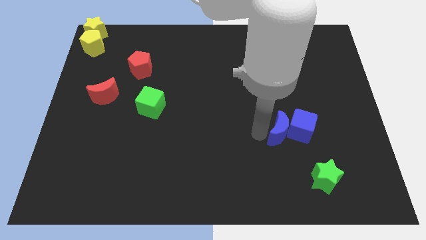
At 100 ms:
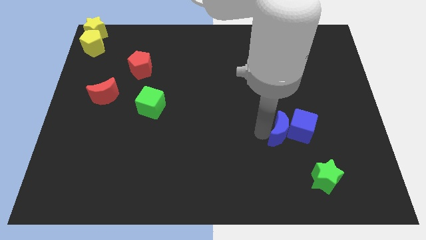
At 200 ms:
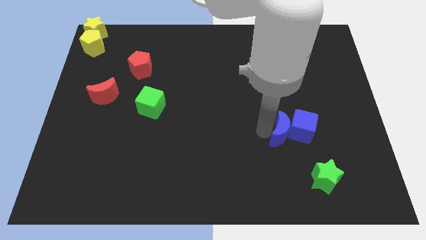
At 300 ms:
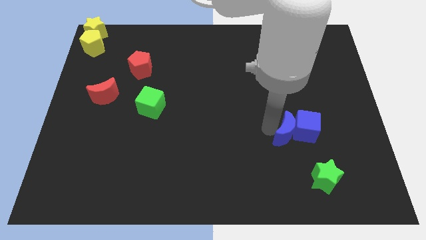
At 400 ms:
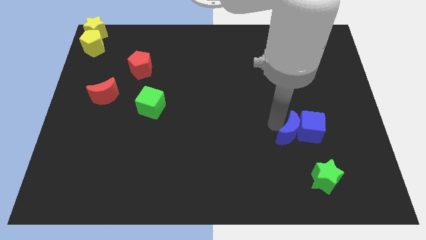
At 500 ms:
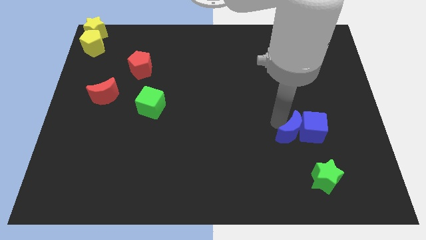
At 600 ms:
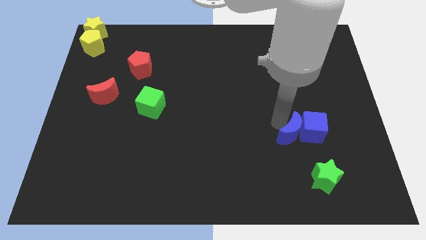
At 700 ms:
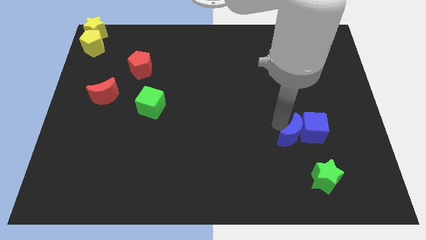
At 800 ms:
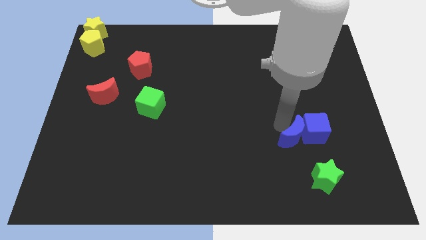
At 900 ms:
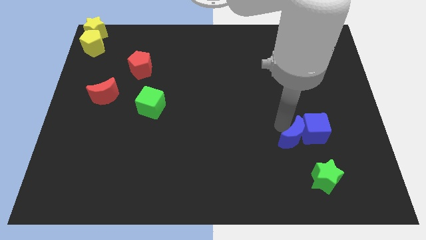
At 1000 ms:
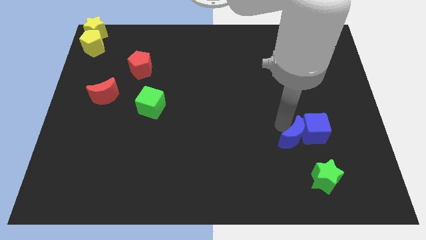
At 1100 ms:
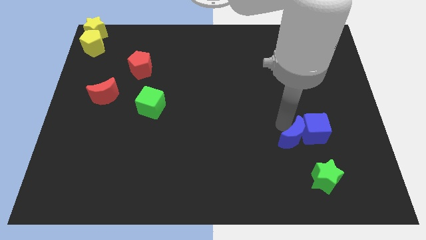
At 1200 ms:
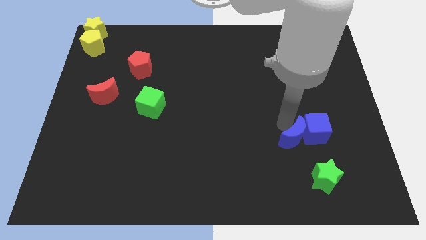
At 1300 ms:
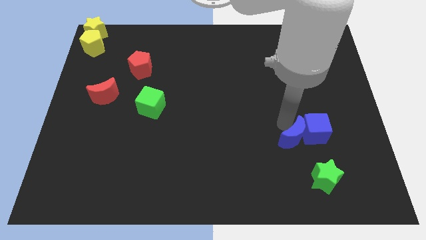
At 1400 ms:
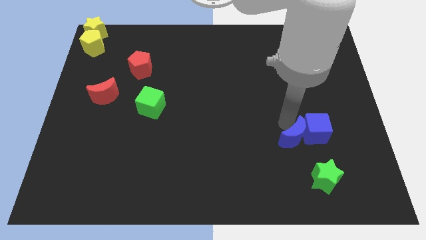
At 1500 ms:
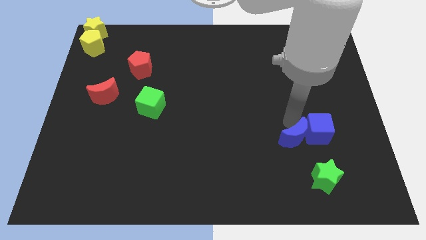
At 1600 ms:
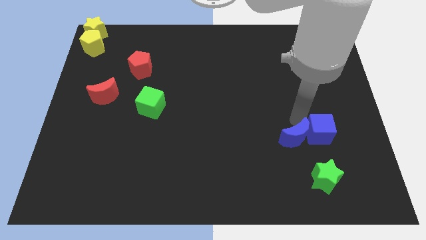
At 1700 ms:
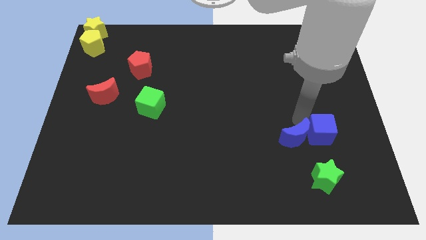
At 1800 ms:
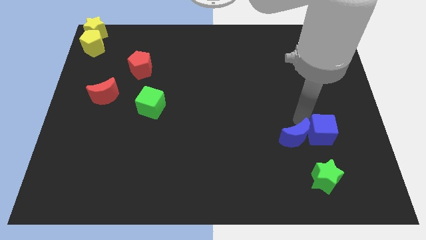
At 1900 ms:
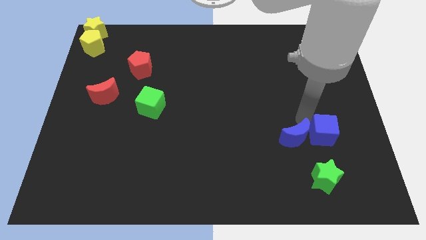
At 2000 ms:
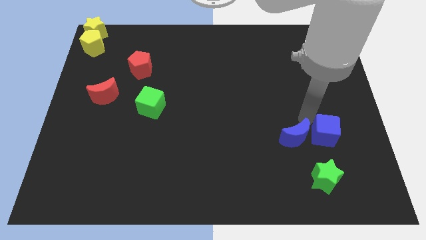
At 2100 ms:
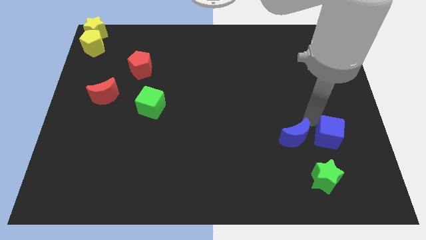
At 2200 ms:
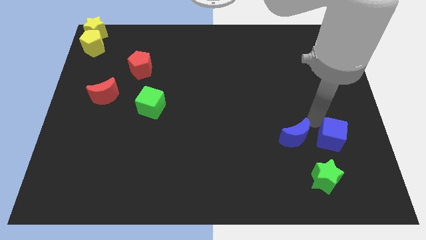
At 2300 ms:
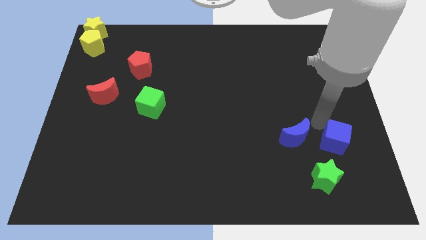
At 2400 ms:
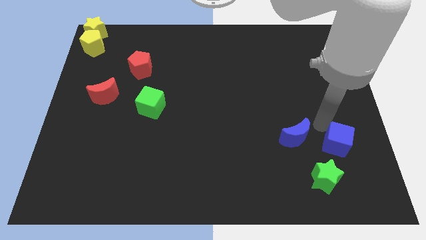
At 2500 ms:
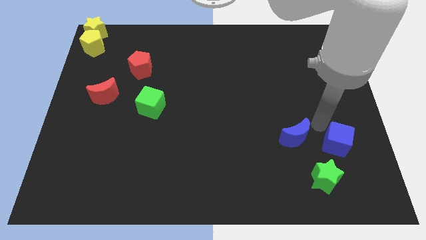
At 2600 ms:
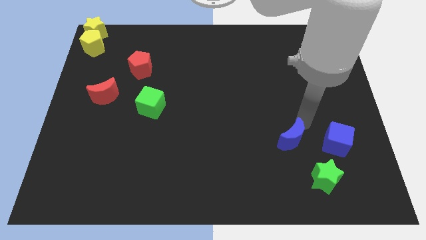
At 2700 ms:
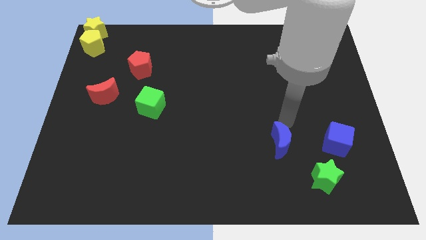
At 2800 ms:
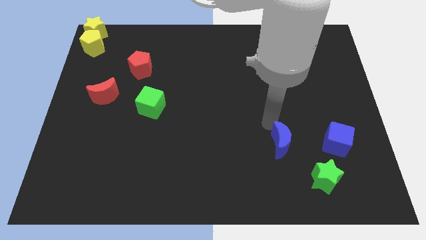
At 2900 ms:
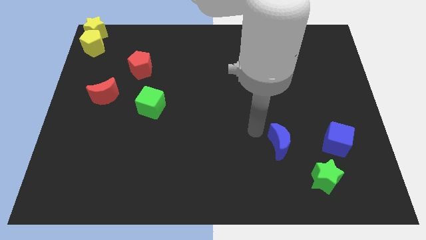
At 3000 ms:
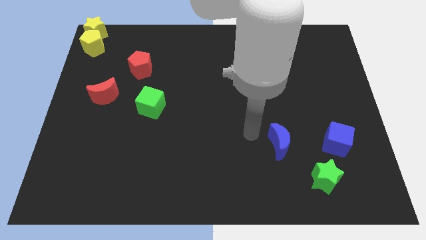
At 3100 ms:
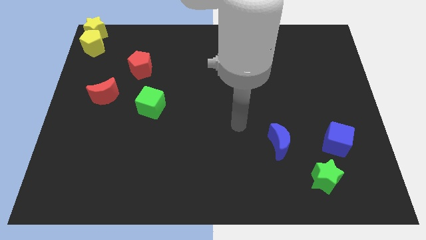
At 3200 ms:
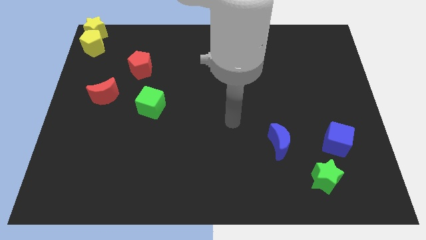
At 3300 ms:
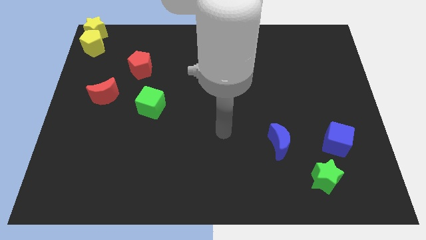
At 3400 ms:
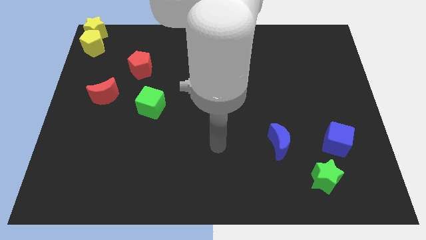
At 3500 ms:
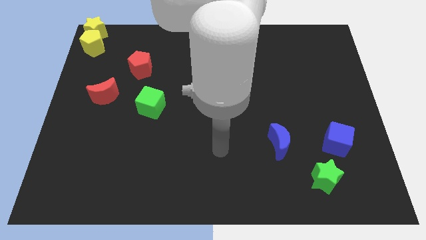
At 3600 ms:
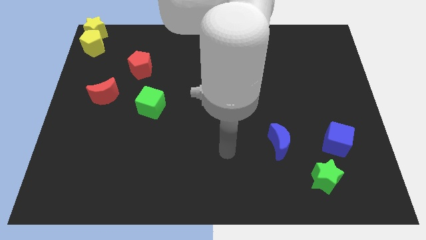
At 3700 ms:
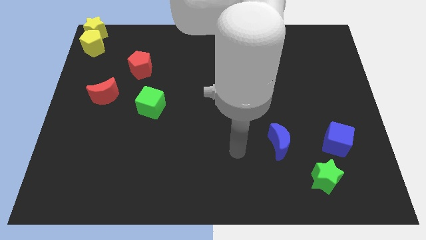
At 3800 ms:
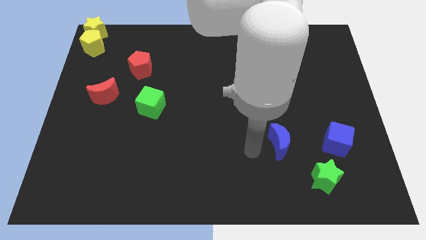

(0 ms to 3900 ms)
move the blue crescent into blue cube

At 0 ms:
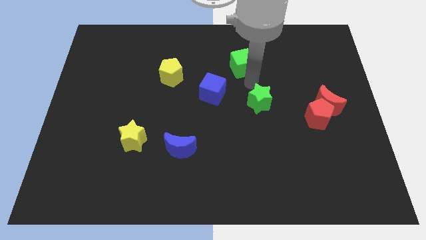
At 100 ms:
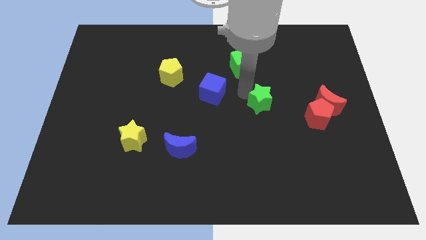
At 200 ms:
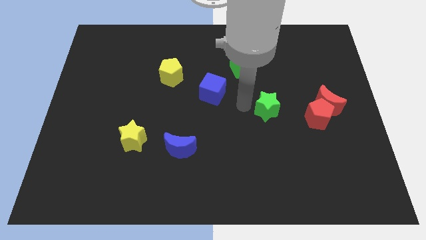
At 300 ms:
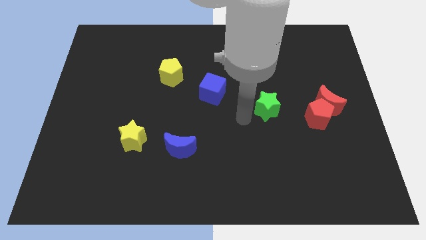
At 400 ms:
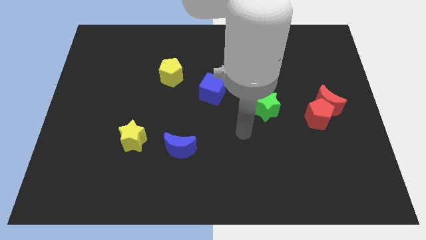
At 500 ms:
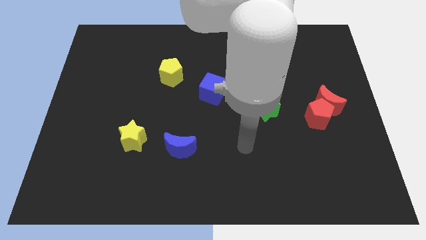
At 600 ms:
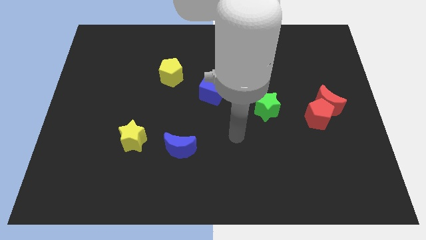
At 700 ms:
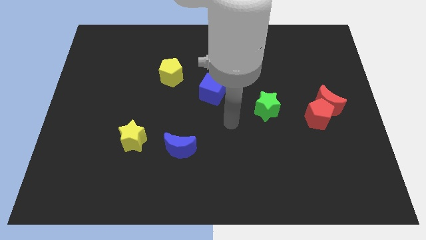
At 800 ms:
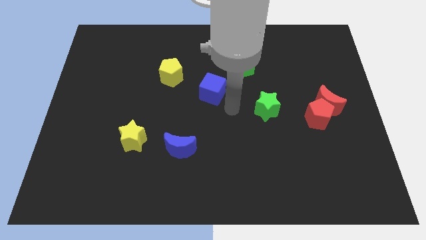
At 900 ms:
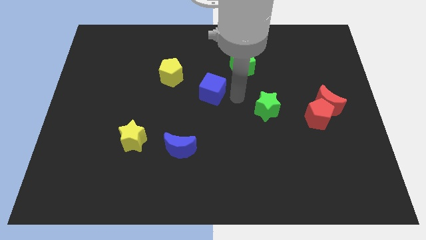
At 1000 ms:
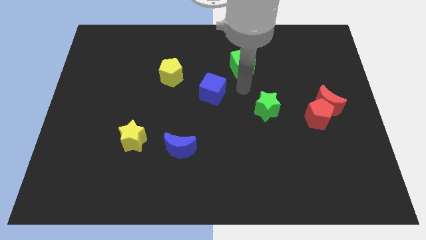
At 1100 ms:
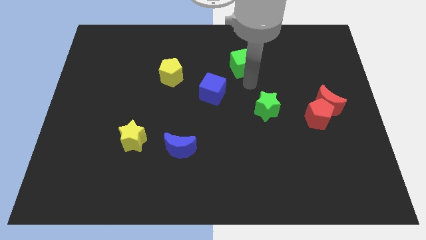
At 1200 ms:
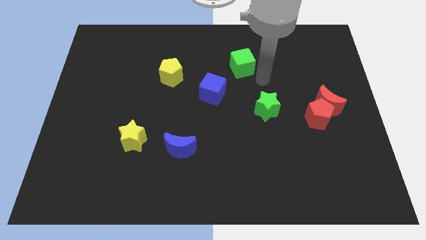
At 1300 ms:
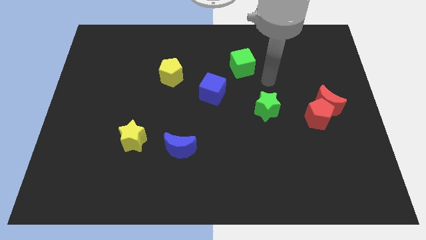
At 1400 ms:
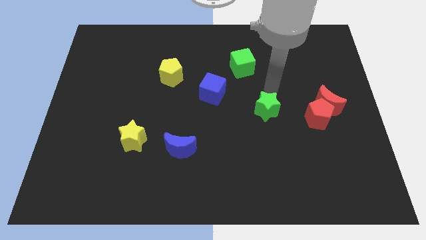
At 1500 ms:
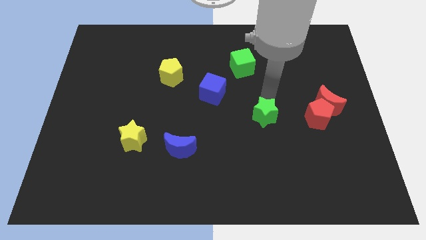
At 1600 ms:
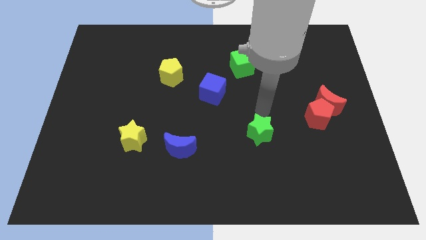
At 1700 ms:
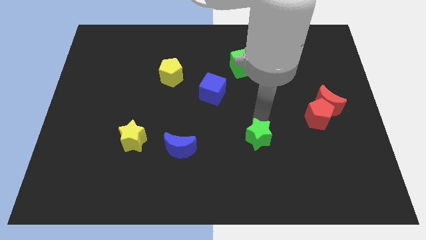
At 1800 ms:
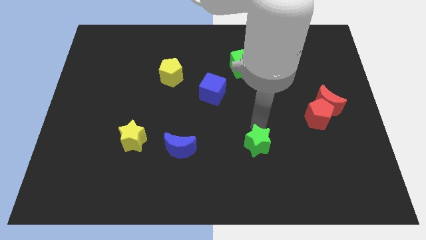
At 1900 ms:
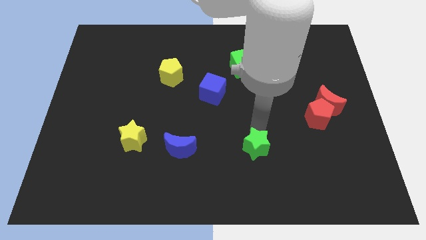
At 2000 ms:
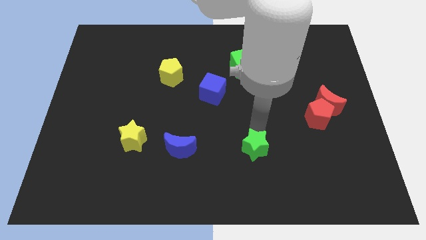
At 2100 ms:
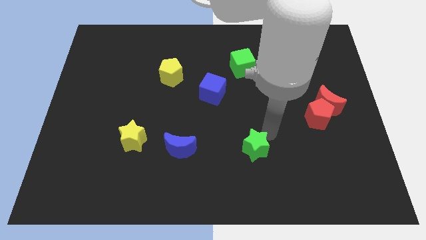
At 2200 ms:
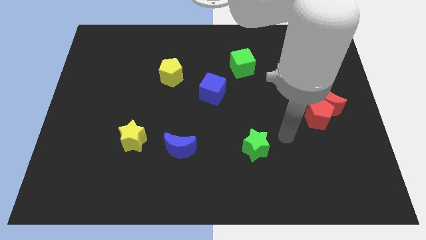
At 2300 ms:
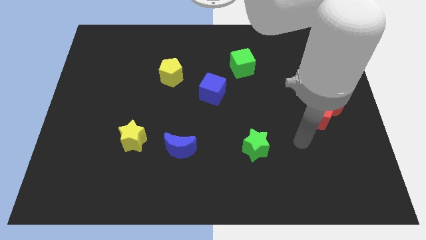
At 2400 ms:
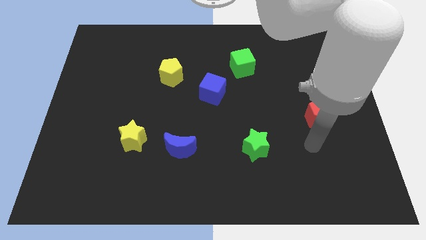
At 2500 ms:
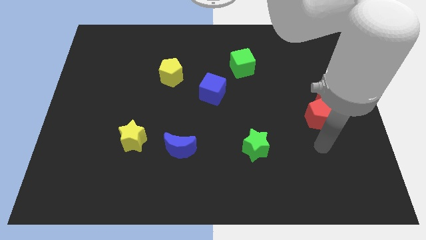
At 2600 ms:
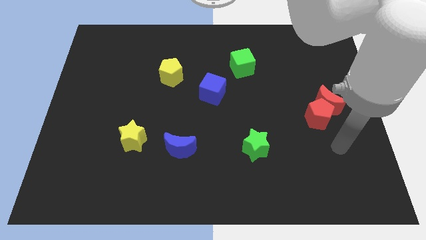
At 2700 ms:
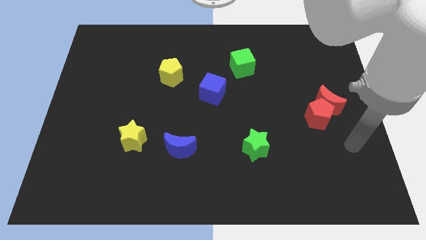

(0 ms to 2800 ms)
place green star parallel to blue moon

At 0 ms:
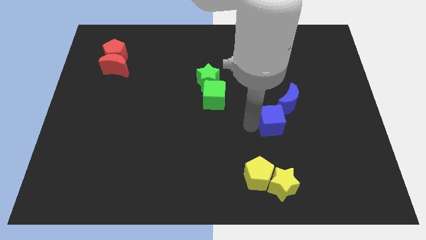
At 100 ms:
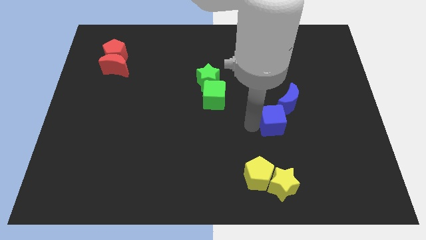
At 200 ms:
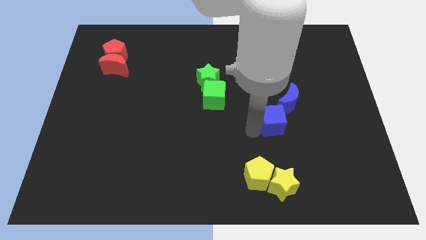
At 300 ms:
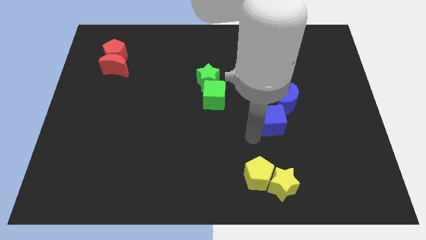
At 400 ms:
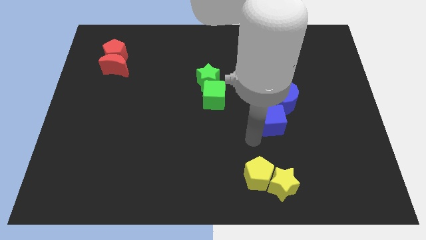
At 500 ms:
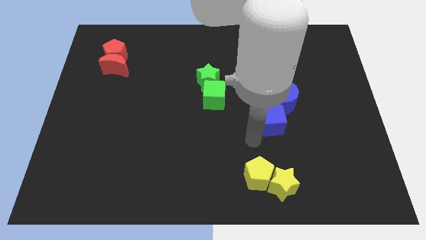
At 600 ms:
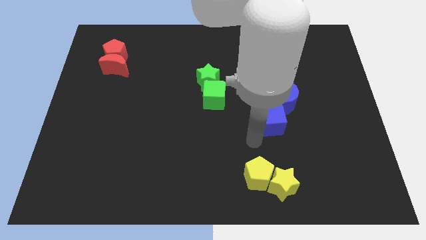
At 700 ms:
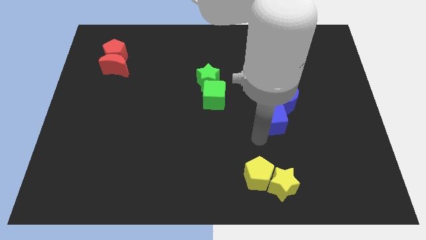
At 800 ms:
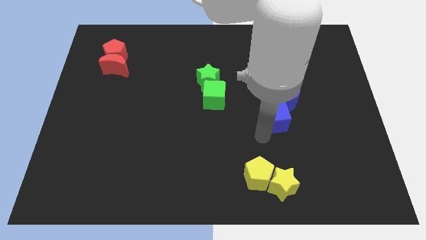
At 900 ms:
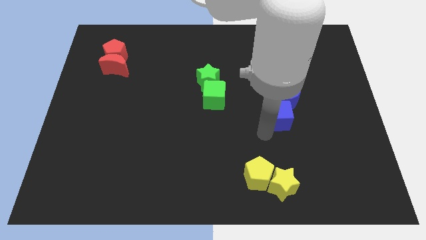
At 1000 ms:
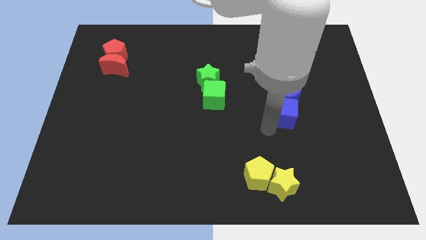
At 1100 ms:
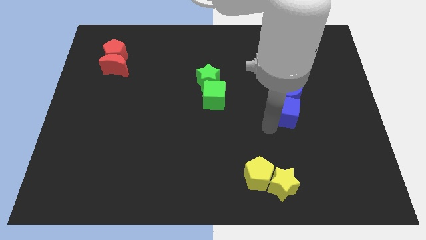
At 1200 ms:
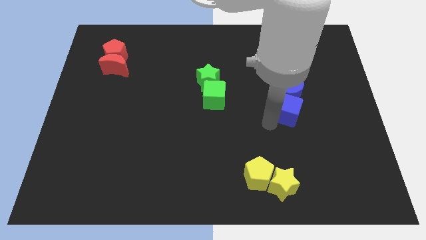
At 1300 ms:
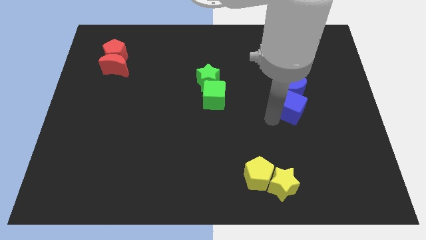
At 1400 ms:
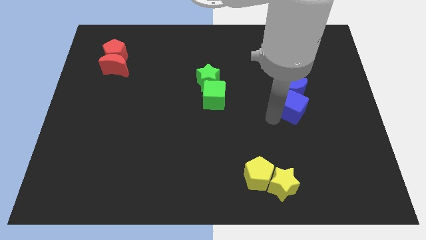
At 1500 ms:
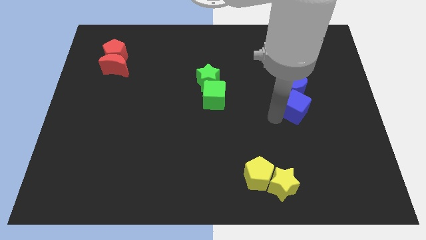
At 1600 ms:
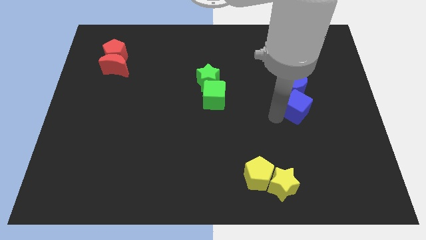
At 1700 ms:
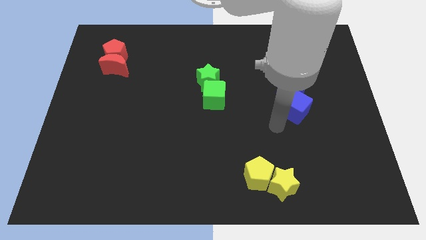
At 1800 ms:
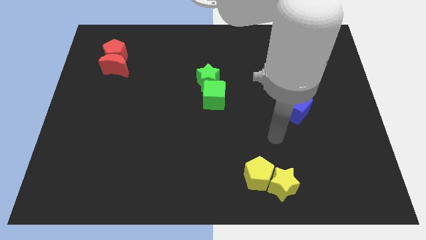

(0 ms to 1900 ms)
push the blue moon with the blue cube

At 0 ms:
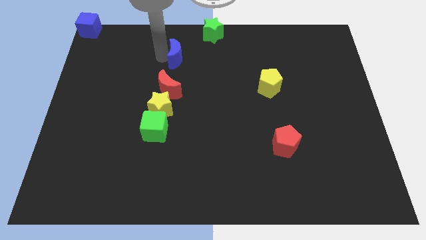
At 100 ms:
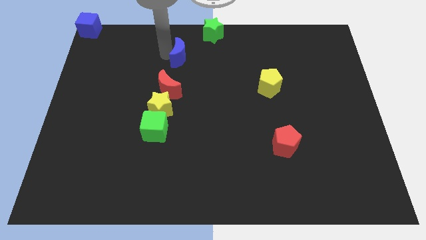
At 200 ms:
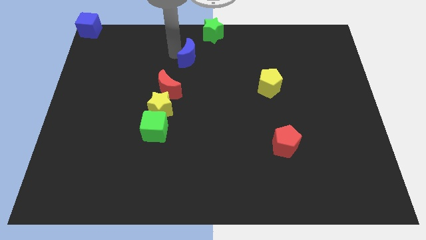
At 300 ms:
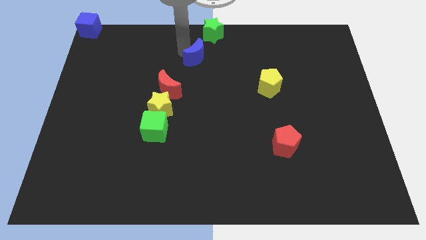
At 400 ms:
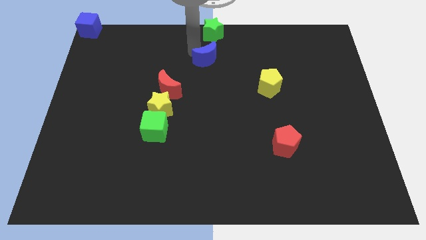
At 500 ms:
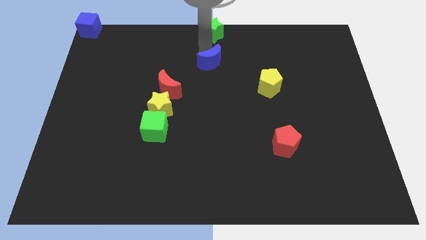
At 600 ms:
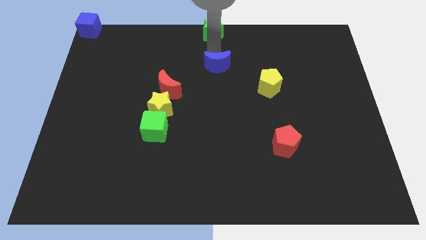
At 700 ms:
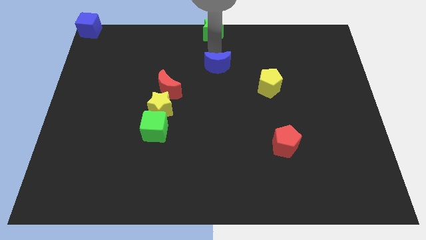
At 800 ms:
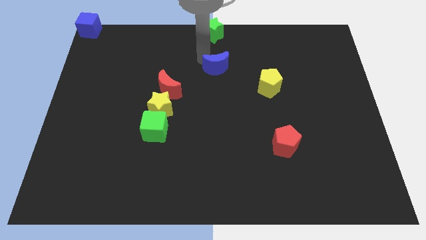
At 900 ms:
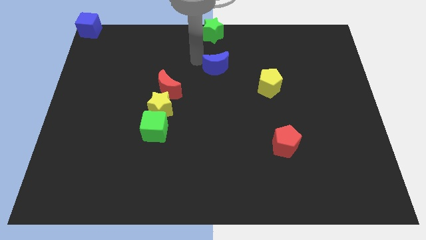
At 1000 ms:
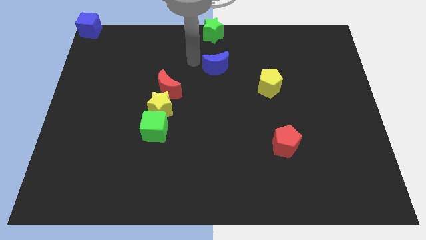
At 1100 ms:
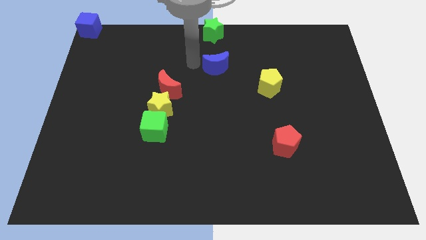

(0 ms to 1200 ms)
push the blue crescent below the green star
